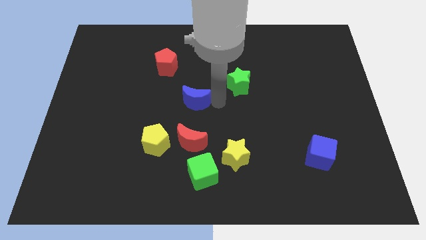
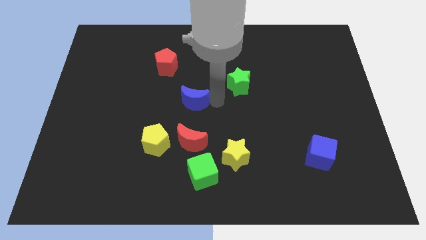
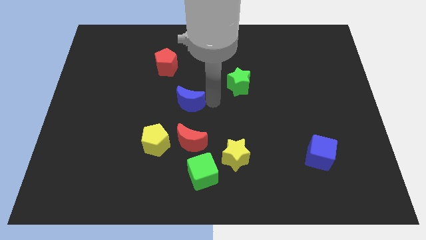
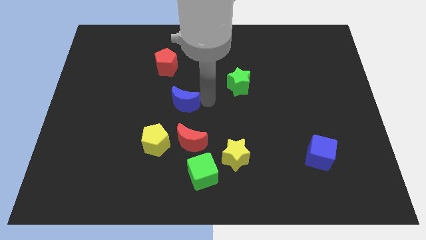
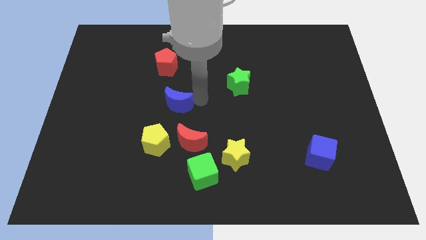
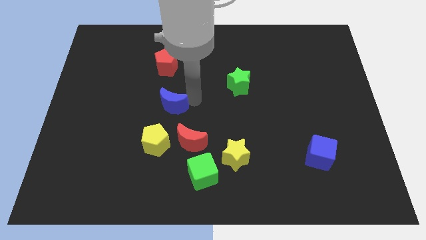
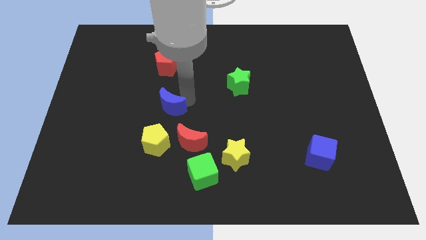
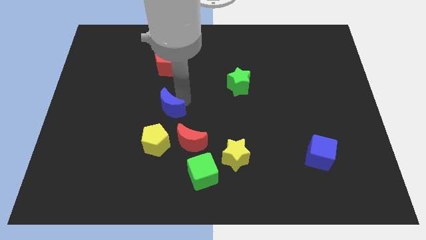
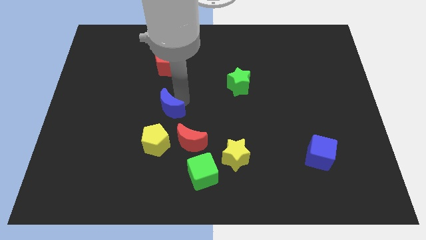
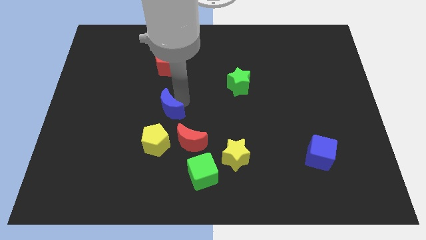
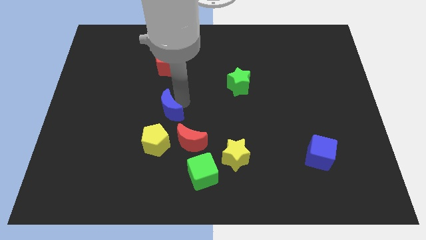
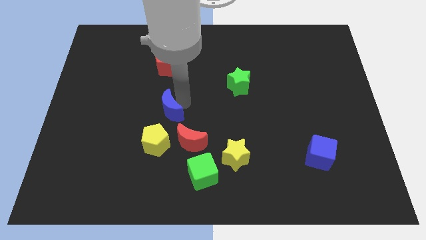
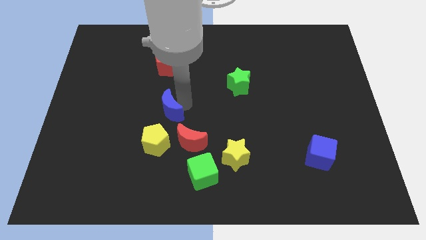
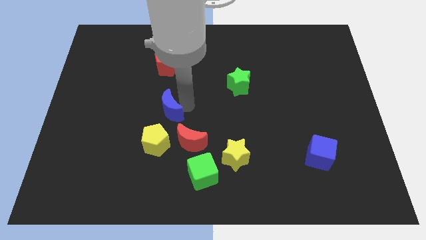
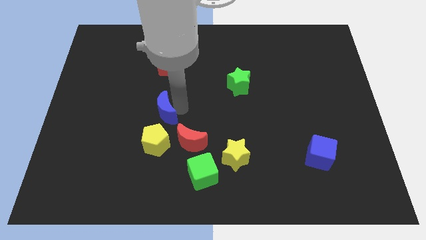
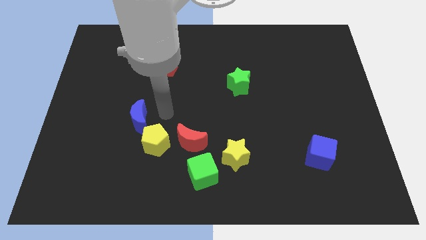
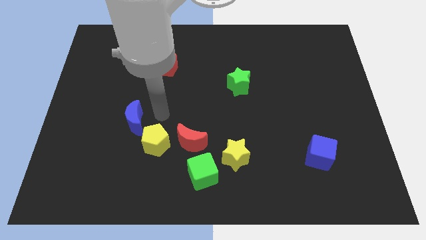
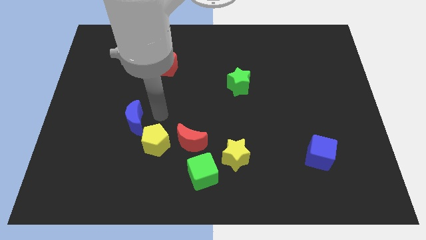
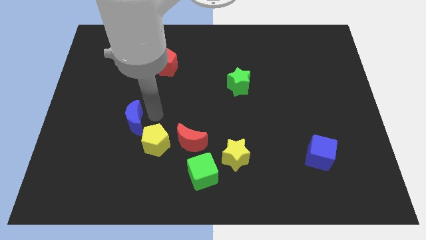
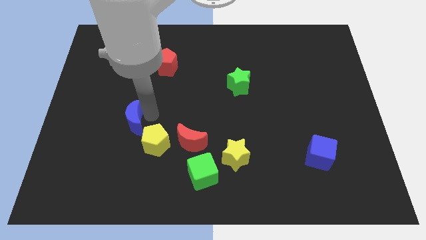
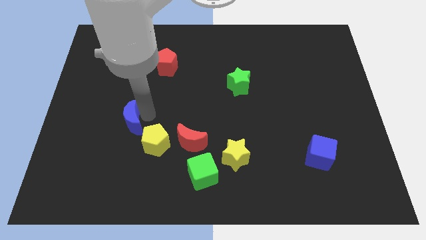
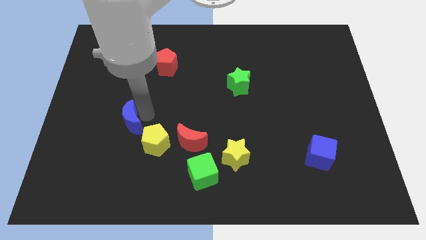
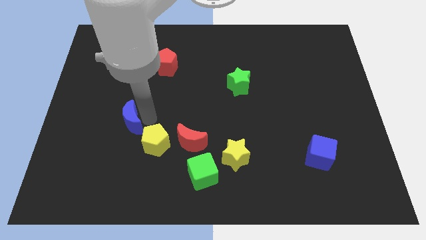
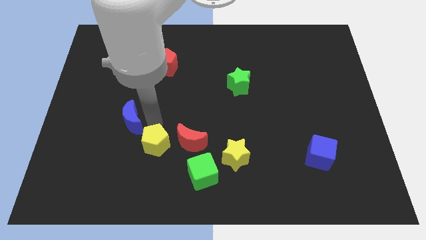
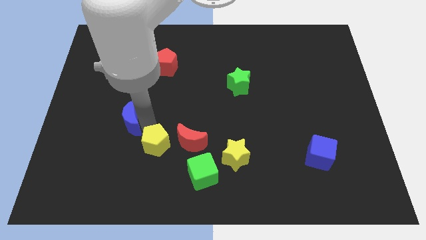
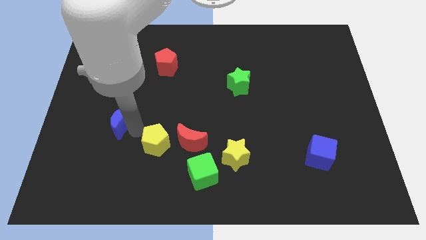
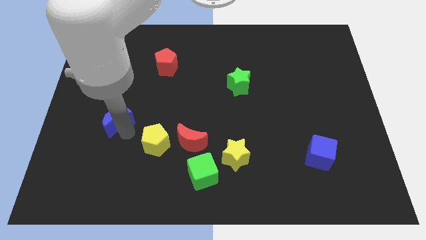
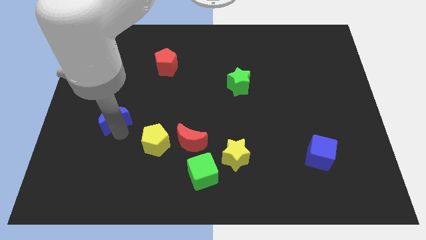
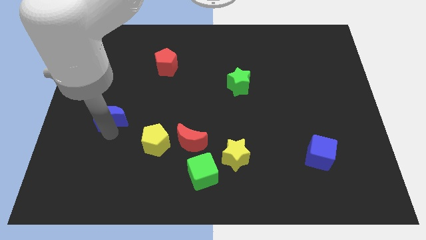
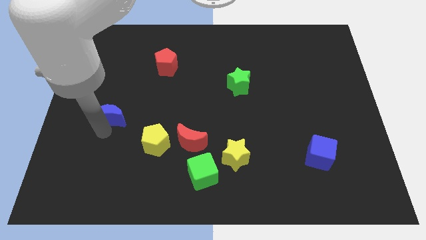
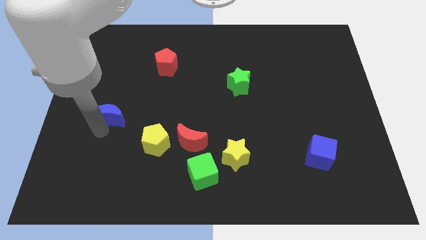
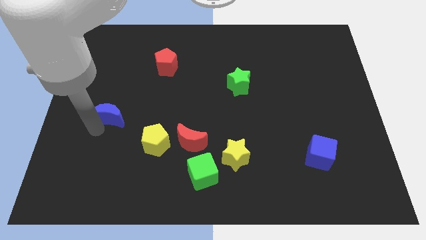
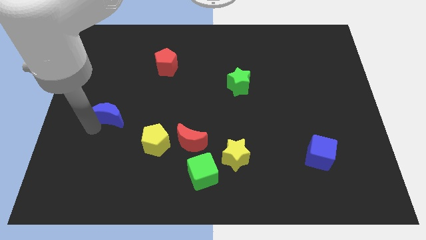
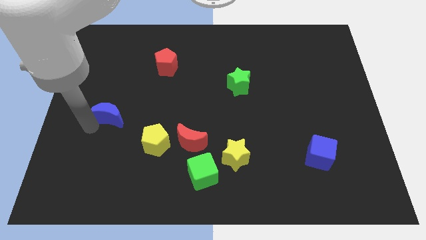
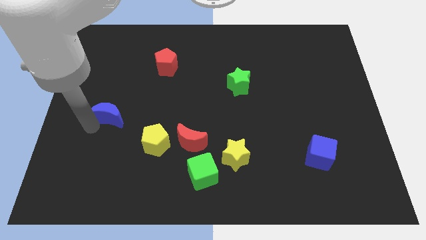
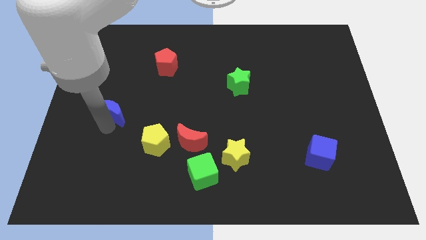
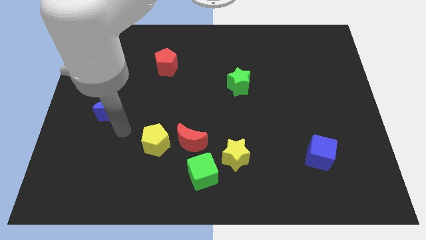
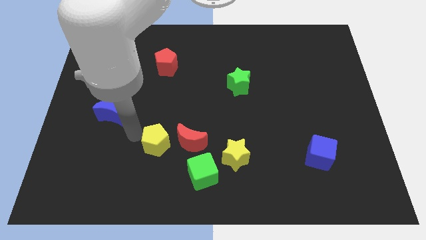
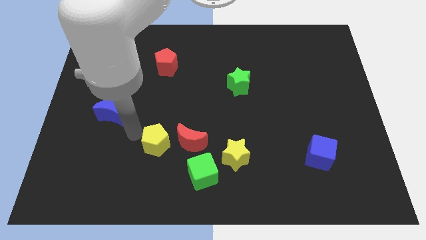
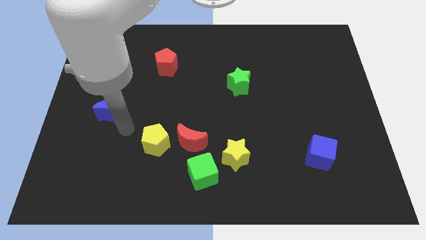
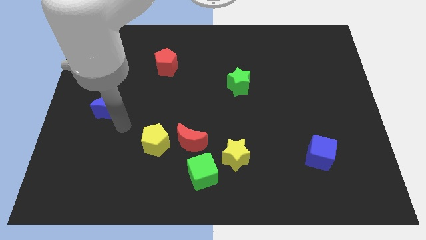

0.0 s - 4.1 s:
slide the blue crescent to the left side of the board

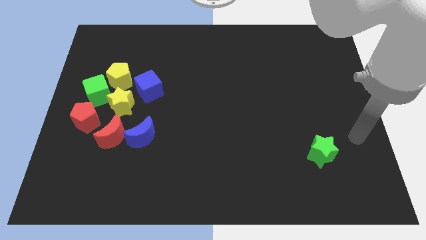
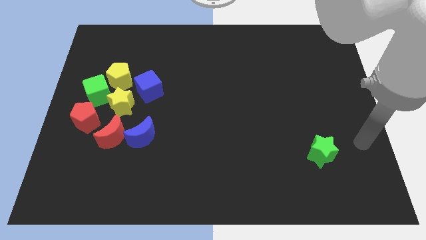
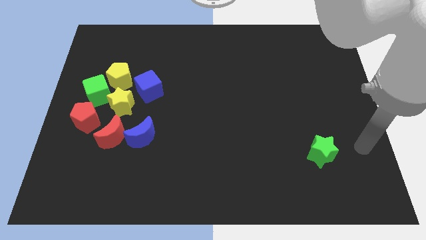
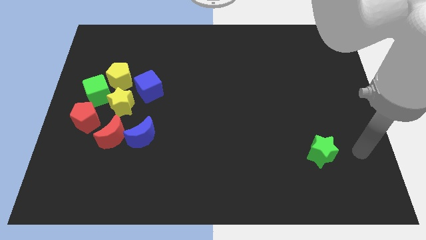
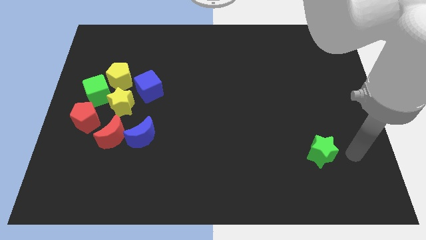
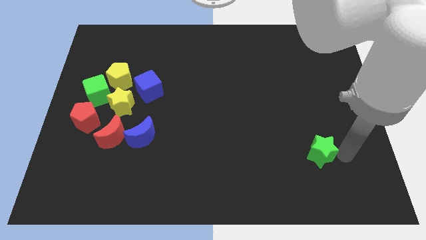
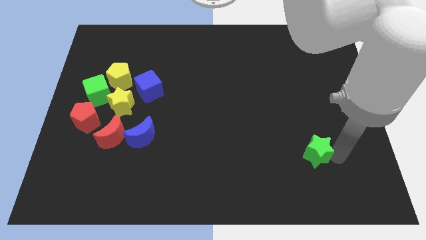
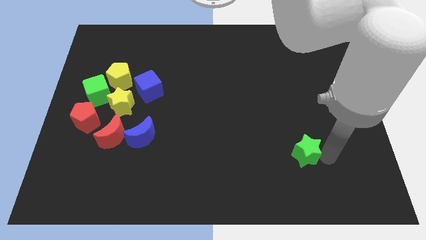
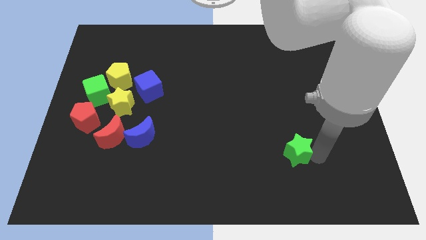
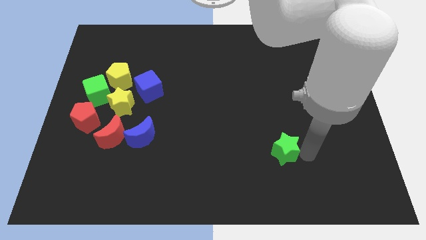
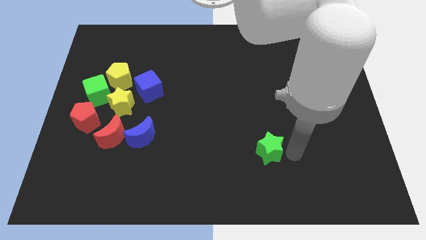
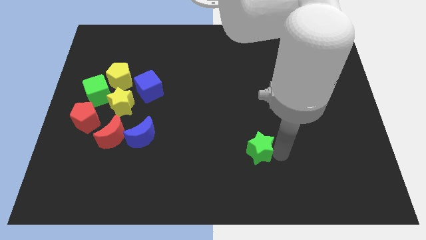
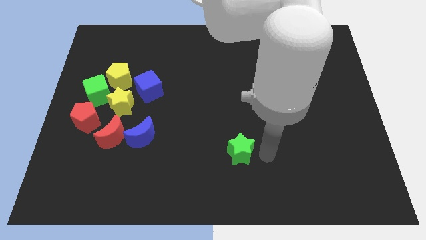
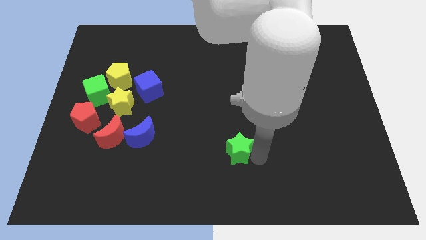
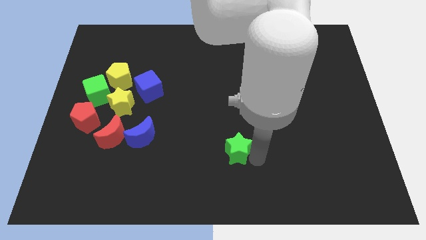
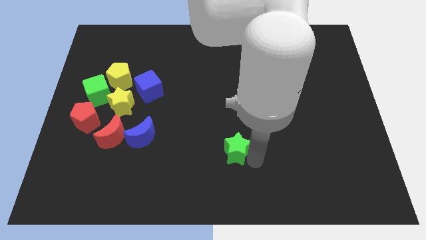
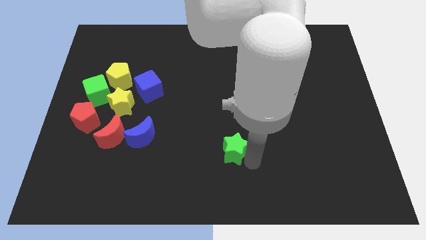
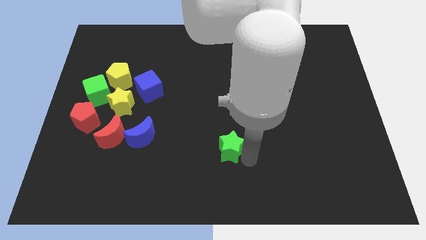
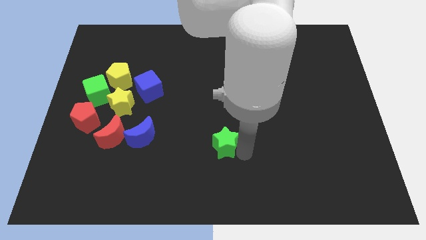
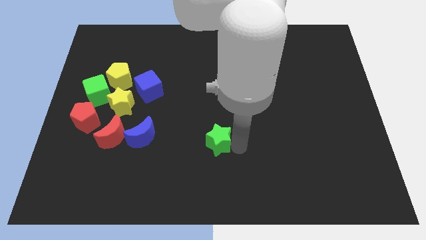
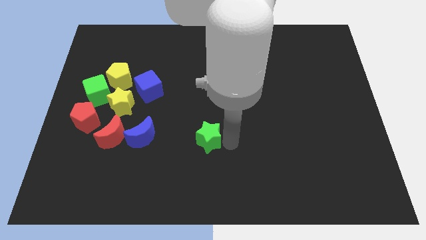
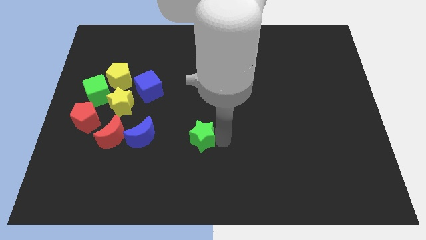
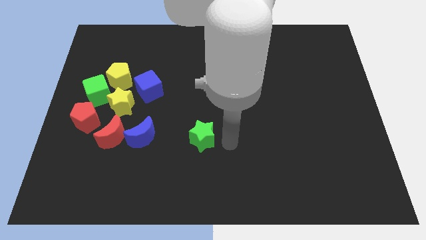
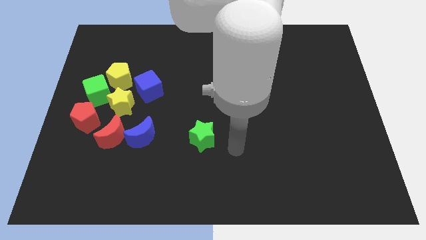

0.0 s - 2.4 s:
move the green star to the right of the blue crescent

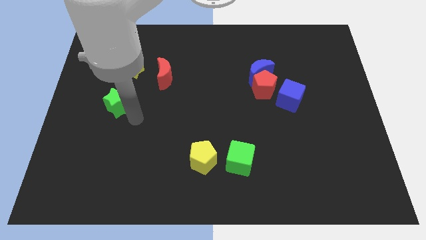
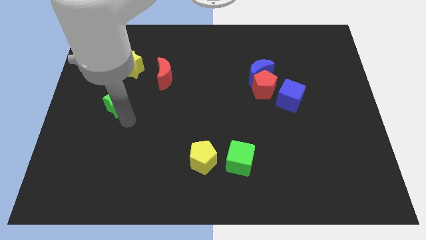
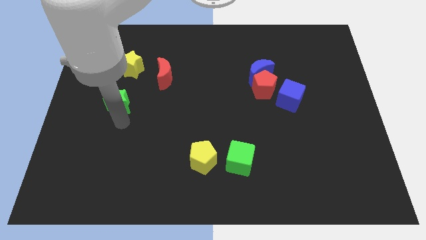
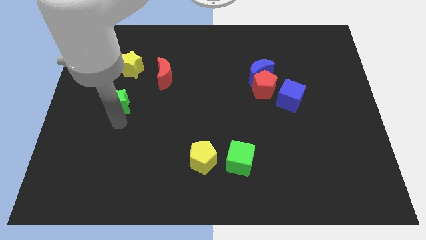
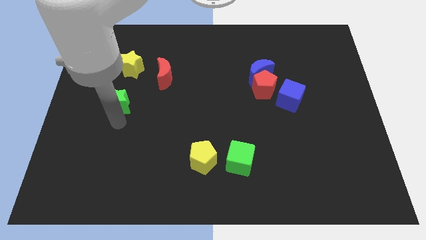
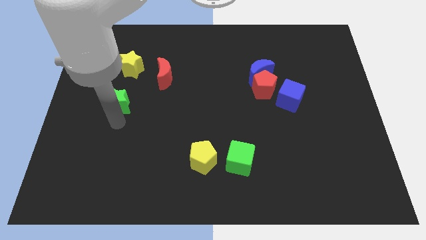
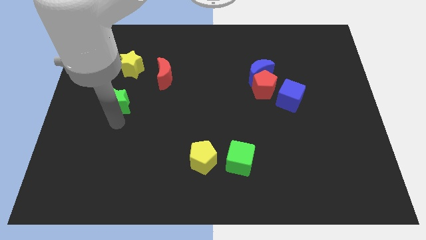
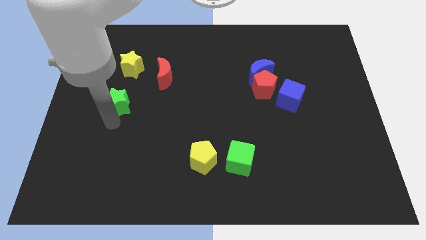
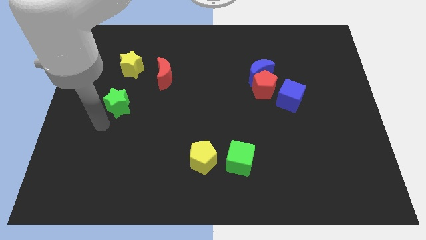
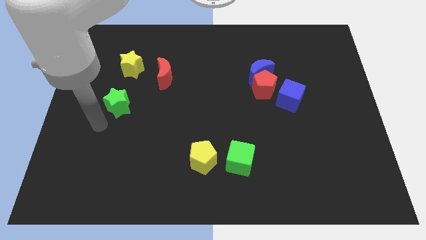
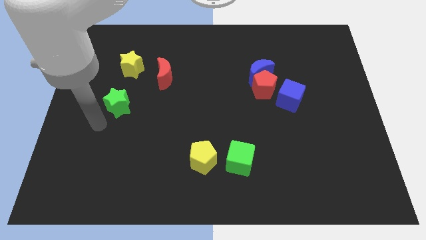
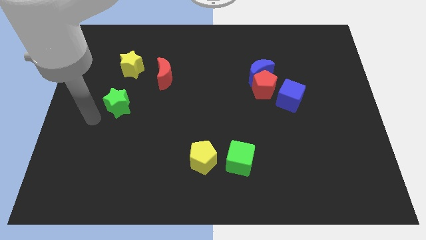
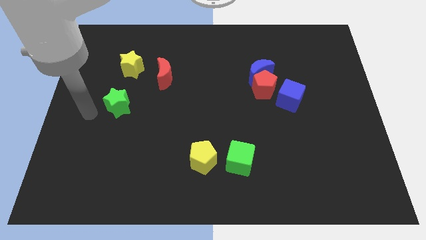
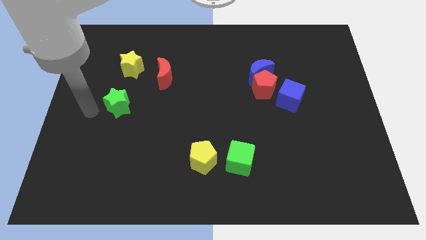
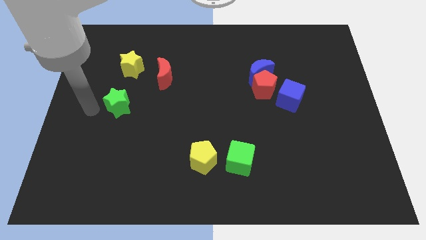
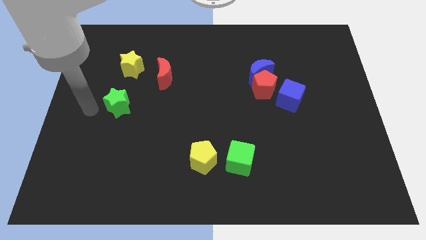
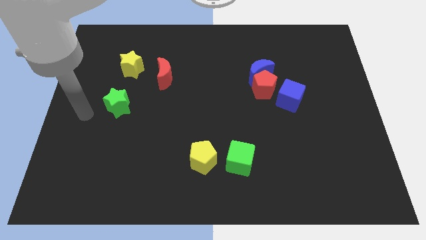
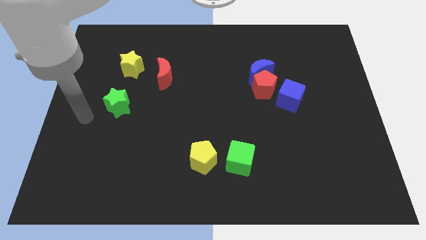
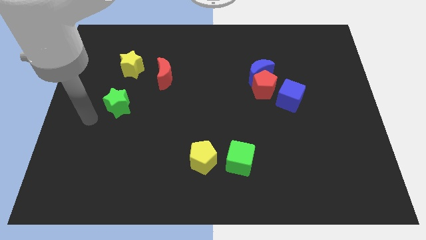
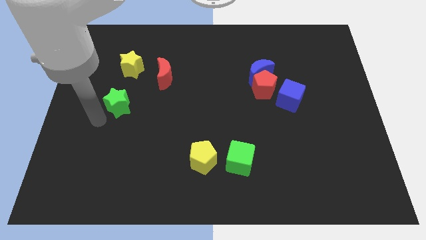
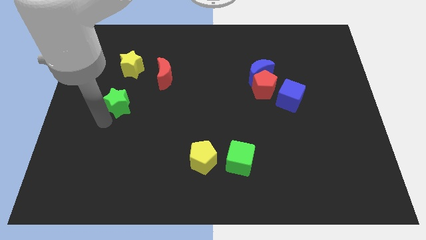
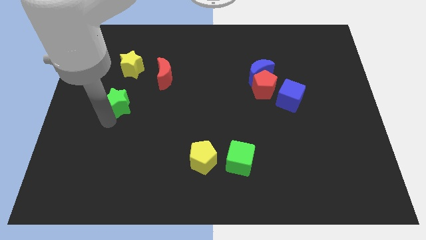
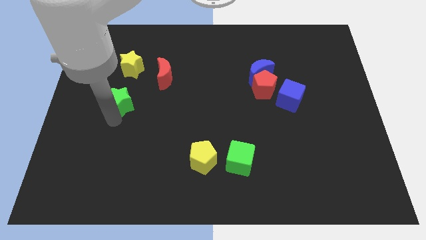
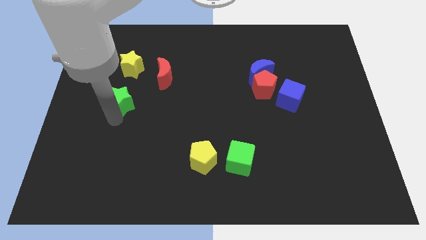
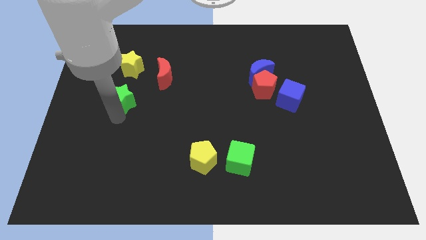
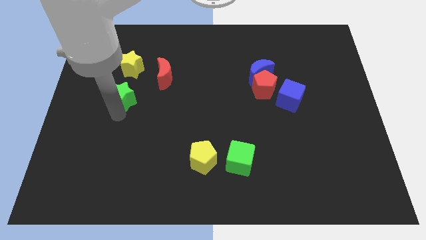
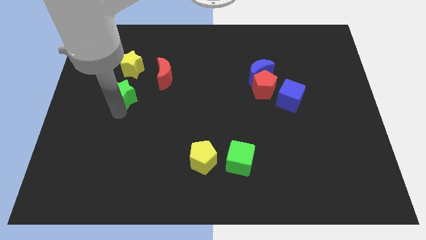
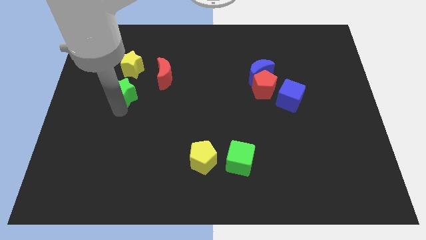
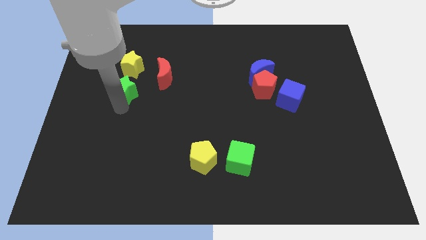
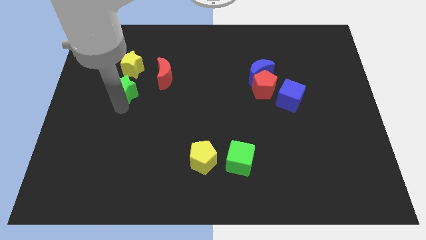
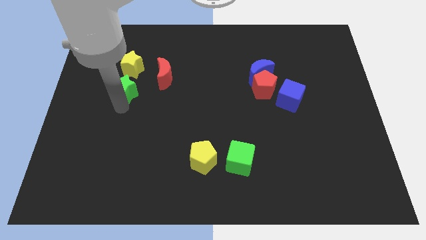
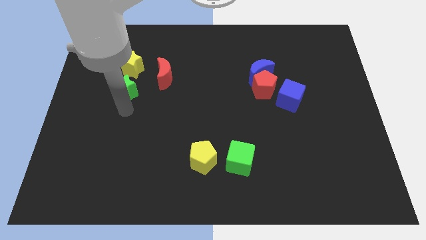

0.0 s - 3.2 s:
push the green star into the yellow star
